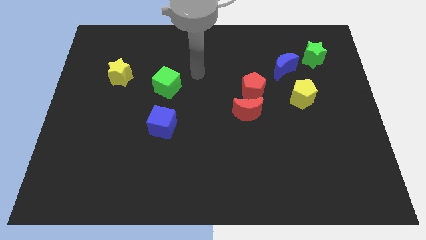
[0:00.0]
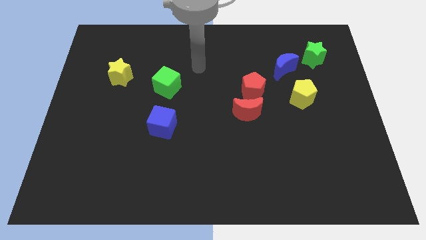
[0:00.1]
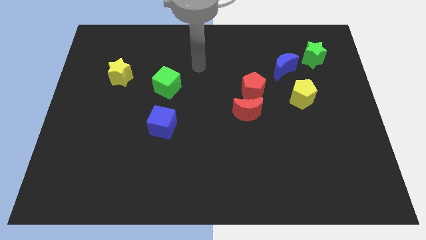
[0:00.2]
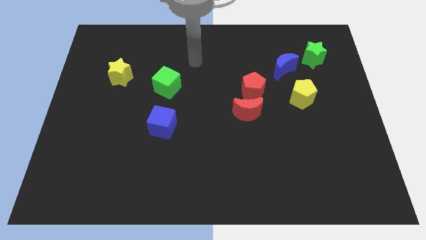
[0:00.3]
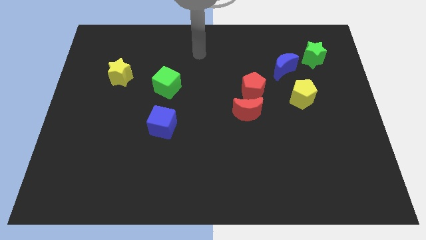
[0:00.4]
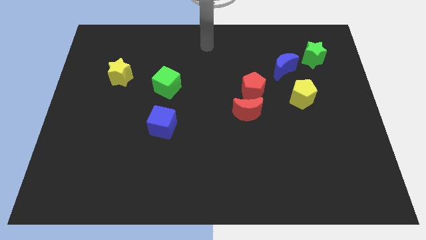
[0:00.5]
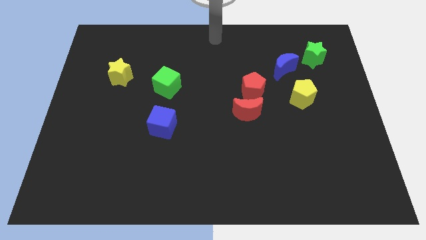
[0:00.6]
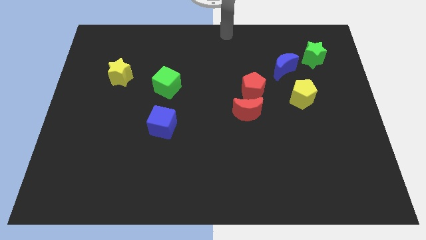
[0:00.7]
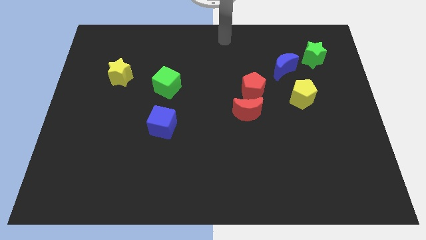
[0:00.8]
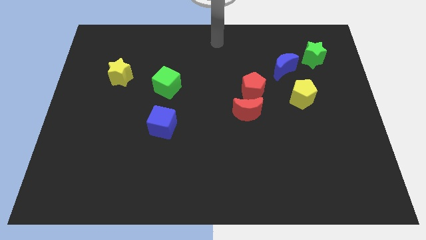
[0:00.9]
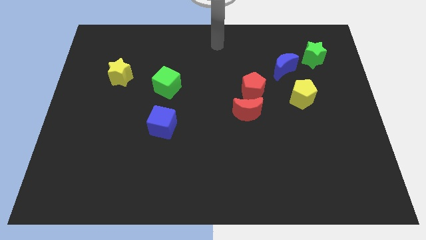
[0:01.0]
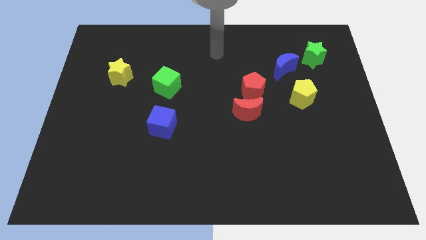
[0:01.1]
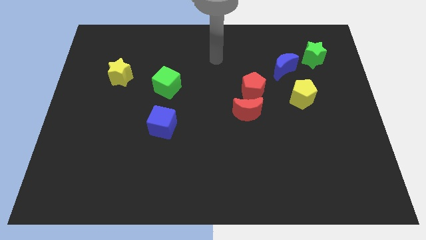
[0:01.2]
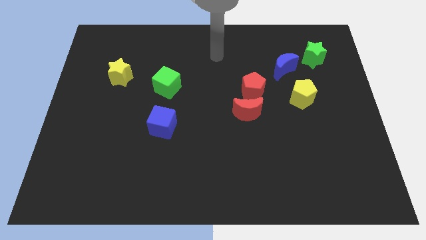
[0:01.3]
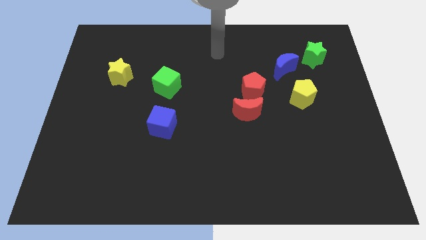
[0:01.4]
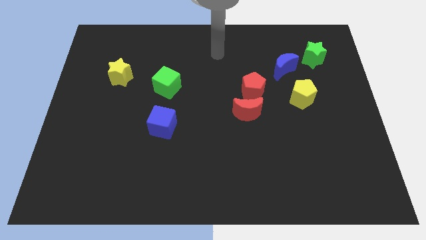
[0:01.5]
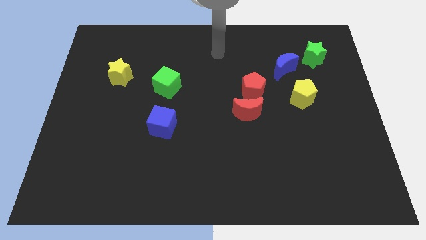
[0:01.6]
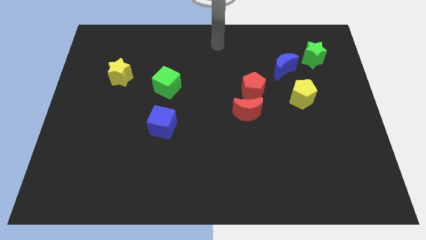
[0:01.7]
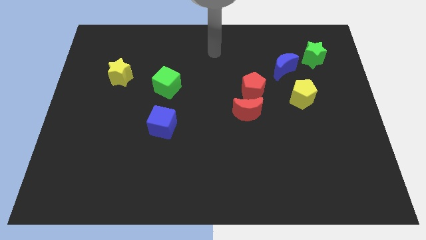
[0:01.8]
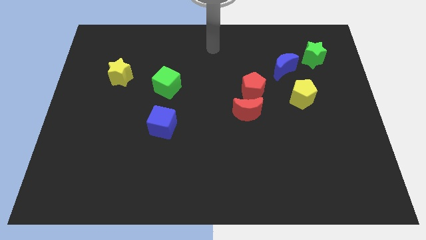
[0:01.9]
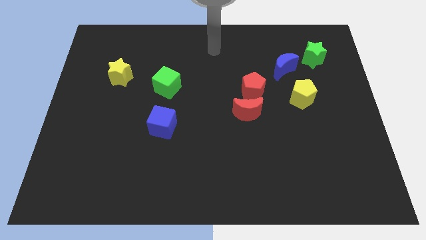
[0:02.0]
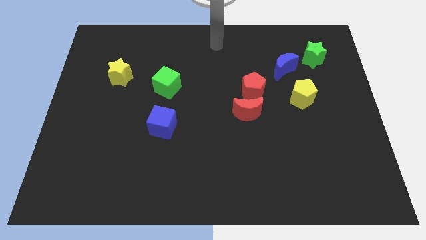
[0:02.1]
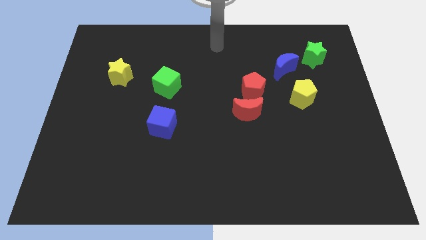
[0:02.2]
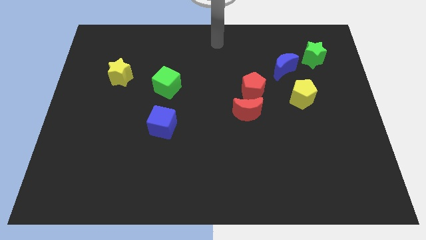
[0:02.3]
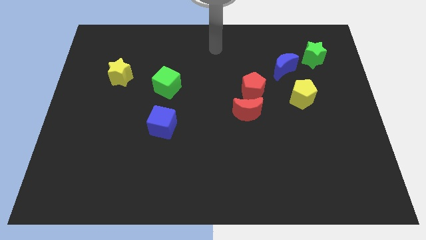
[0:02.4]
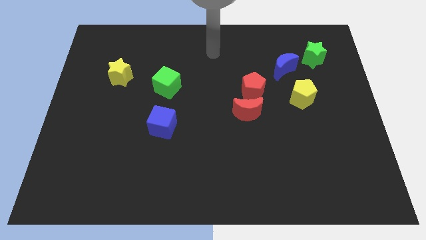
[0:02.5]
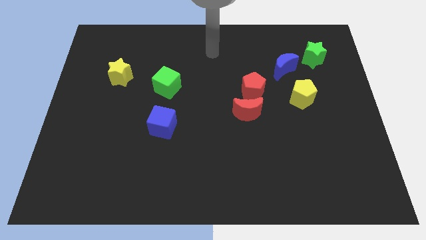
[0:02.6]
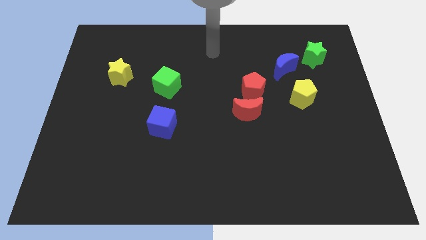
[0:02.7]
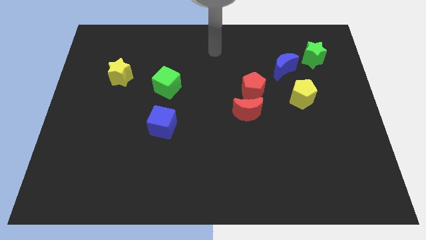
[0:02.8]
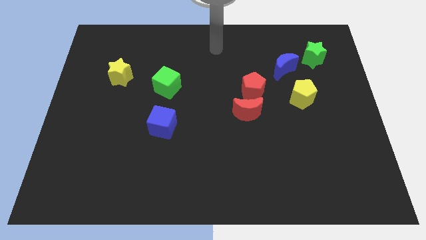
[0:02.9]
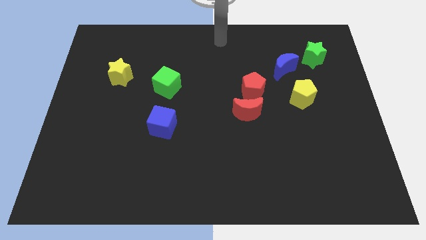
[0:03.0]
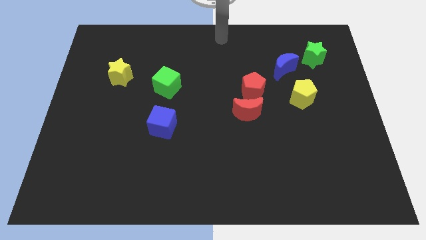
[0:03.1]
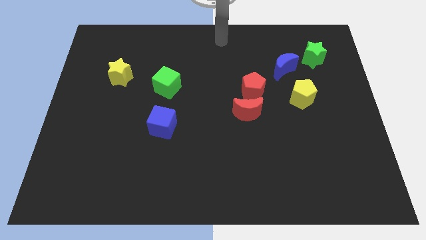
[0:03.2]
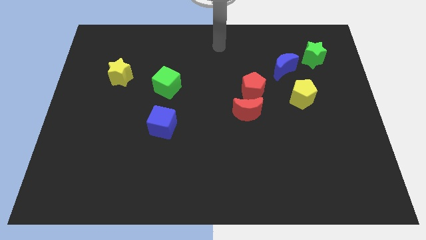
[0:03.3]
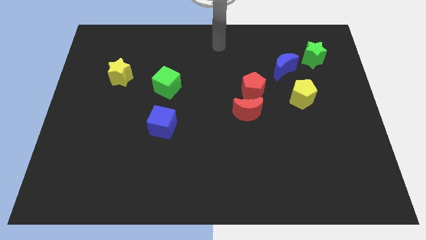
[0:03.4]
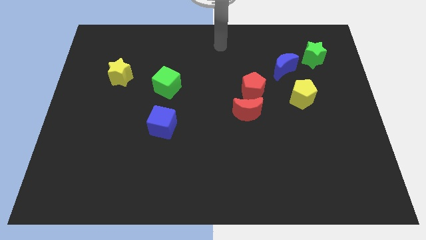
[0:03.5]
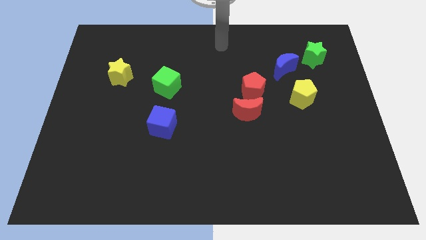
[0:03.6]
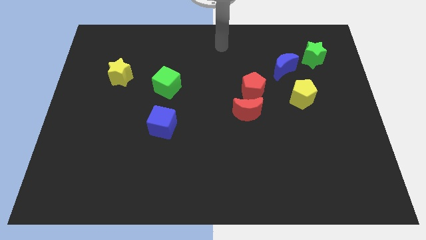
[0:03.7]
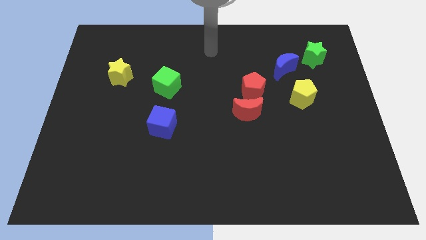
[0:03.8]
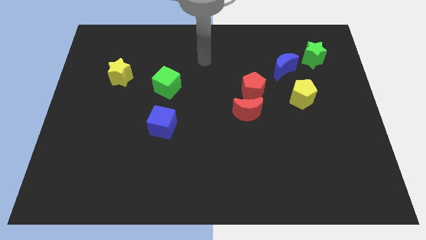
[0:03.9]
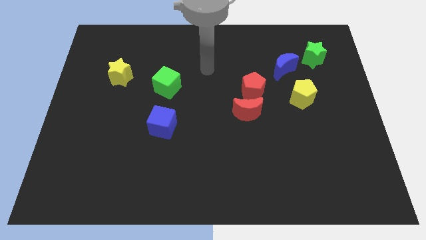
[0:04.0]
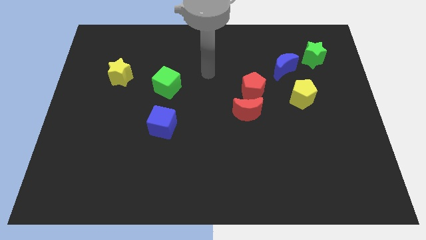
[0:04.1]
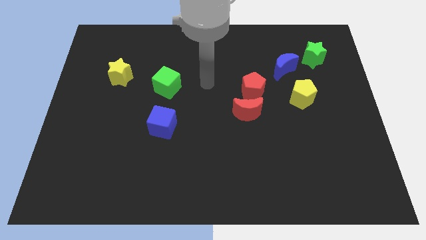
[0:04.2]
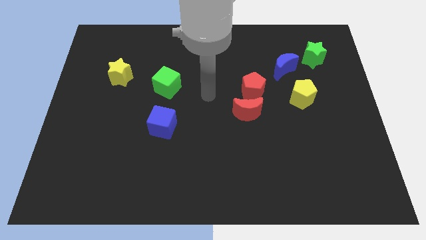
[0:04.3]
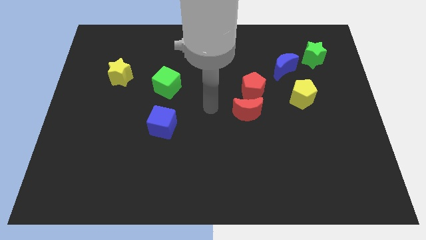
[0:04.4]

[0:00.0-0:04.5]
place your arm at the center of the board

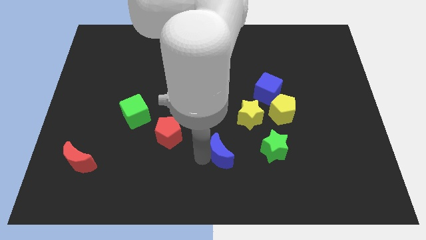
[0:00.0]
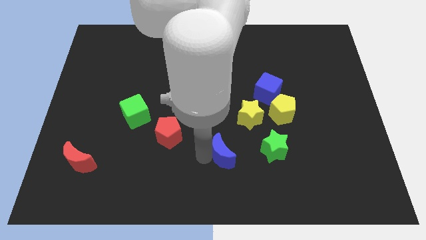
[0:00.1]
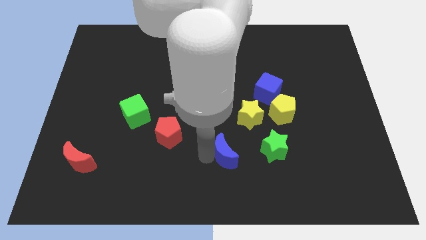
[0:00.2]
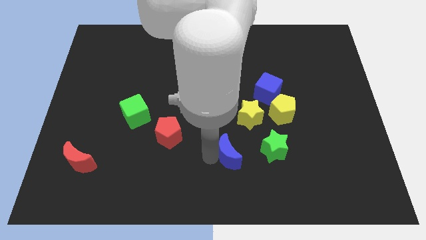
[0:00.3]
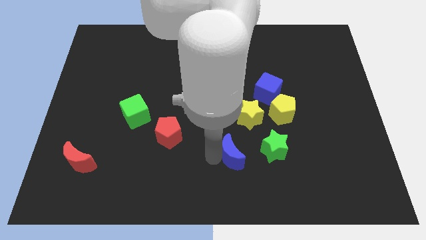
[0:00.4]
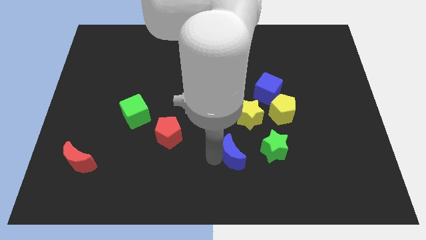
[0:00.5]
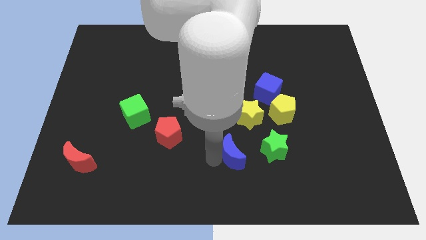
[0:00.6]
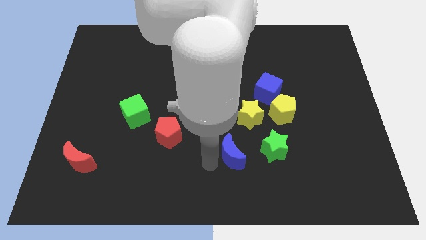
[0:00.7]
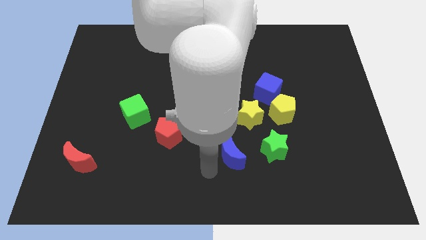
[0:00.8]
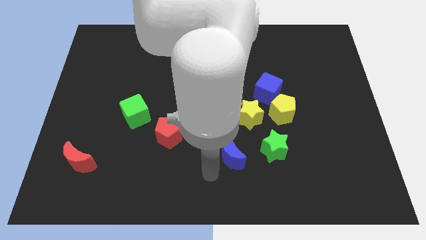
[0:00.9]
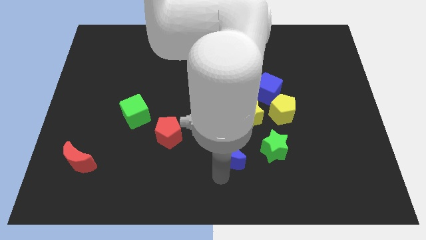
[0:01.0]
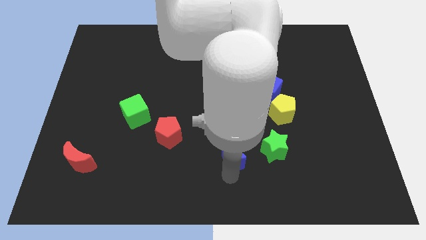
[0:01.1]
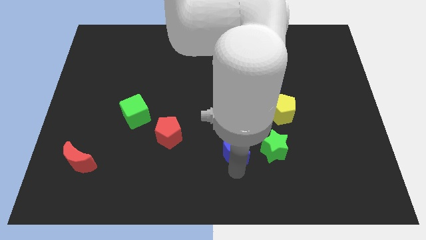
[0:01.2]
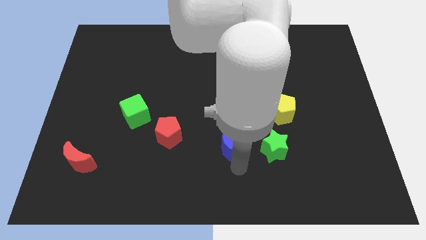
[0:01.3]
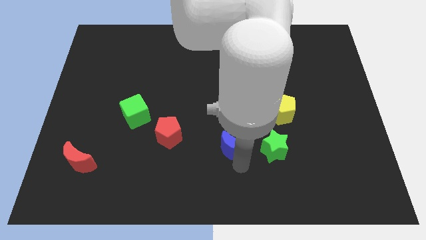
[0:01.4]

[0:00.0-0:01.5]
move the blue crescent to the left of the green star

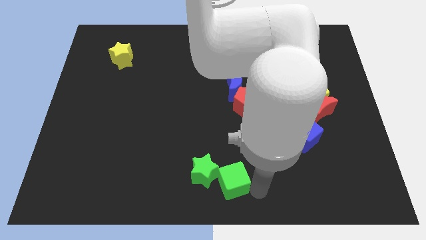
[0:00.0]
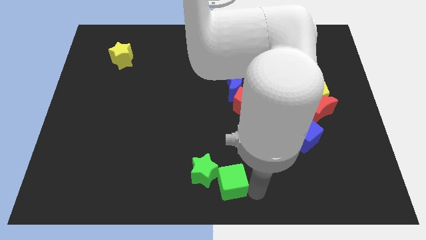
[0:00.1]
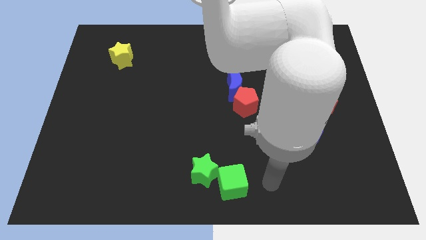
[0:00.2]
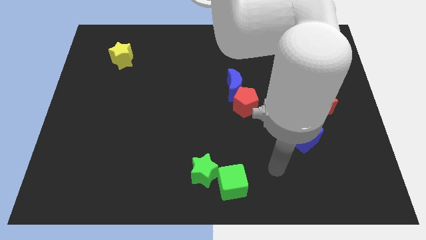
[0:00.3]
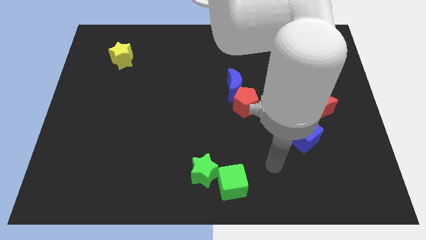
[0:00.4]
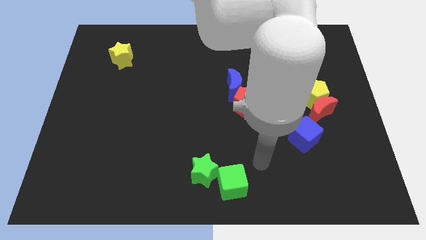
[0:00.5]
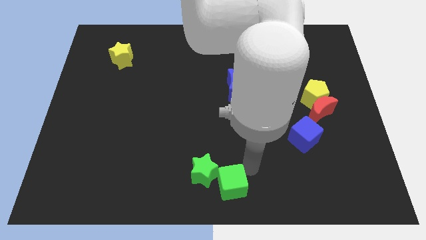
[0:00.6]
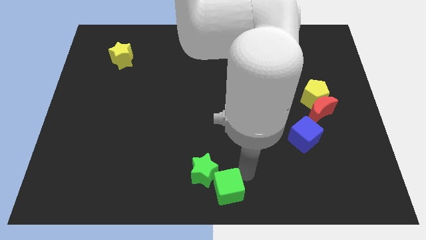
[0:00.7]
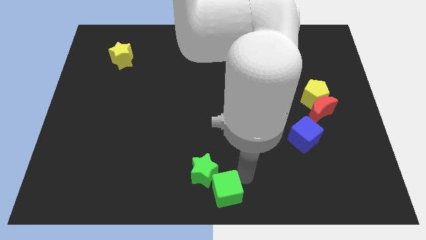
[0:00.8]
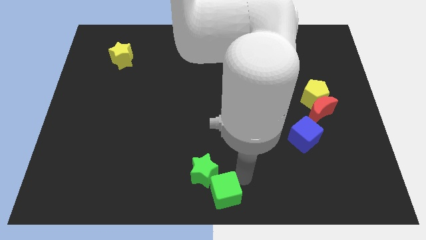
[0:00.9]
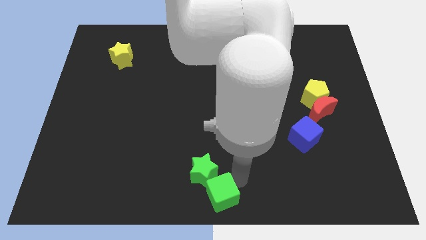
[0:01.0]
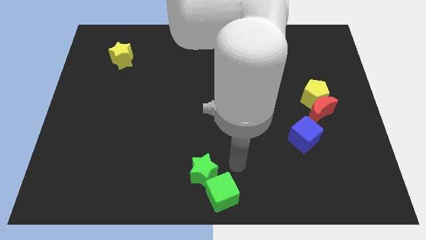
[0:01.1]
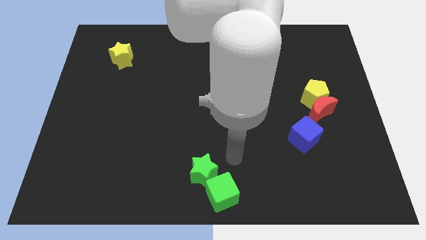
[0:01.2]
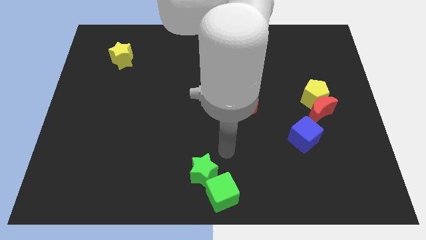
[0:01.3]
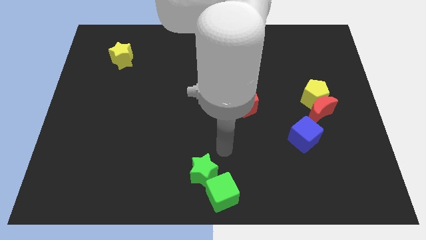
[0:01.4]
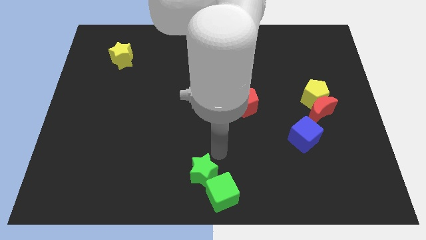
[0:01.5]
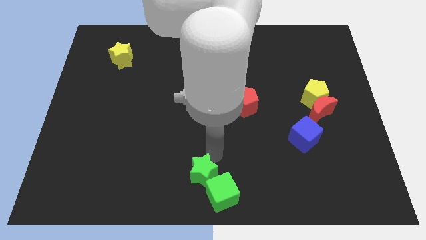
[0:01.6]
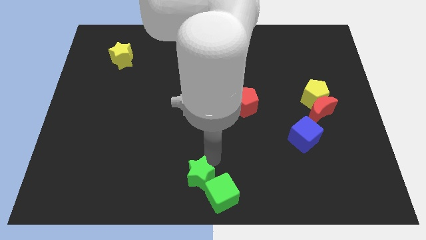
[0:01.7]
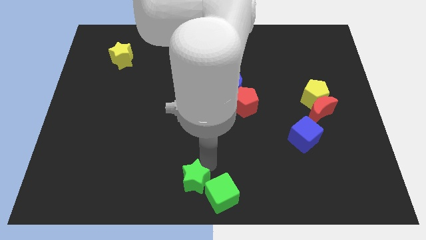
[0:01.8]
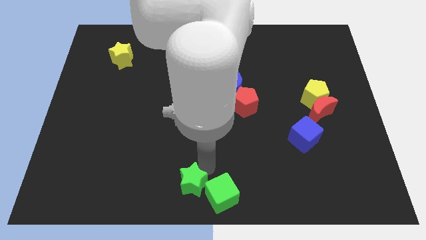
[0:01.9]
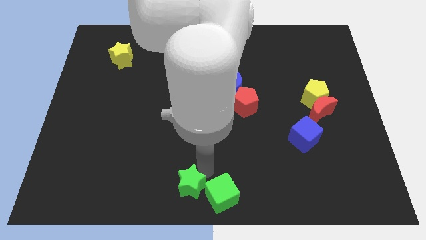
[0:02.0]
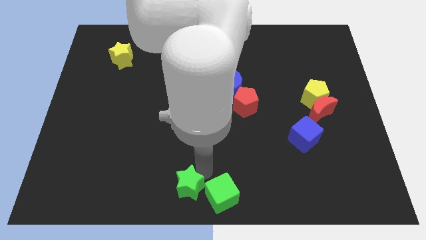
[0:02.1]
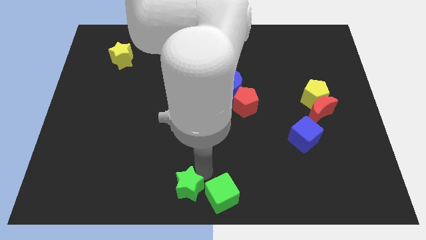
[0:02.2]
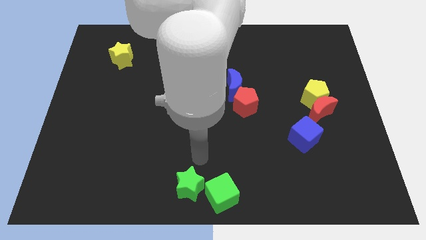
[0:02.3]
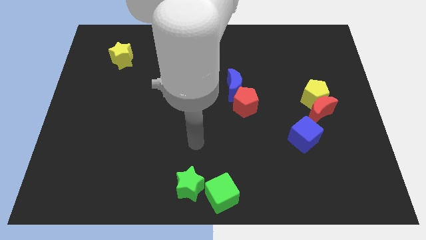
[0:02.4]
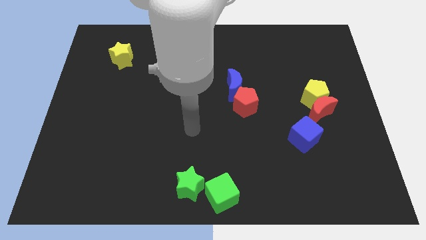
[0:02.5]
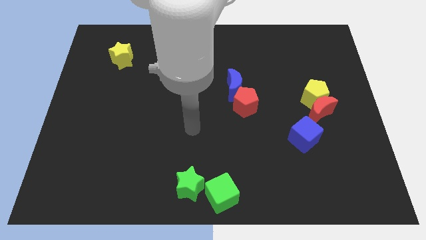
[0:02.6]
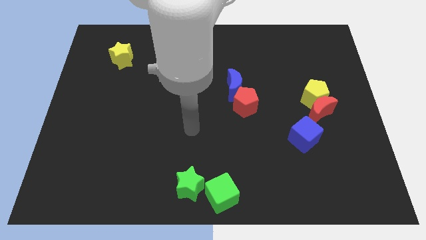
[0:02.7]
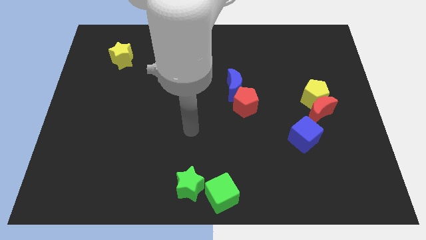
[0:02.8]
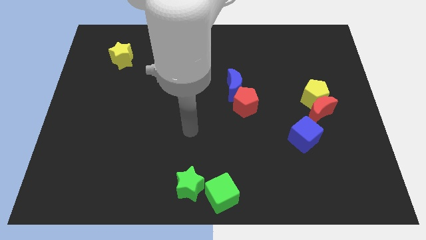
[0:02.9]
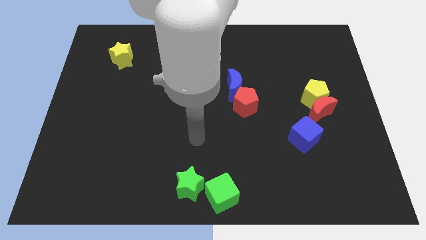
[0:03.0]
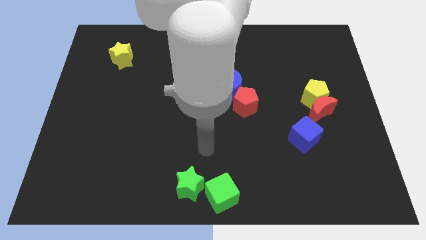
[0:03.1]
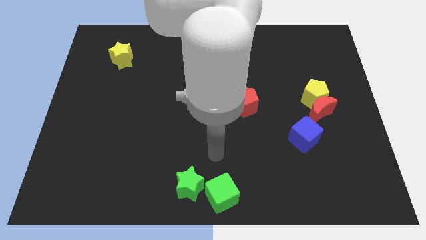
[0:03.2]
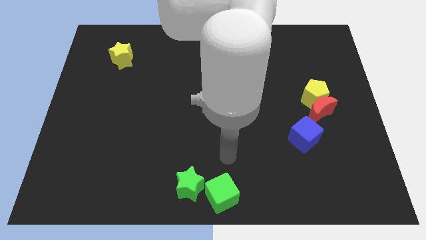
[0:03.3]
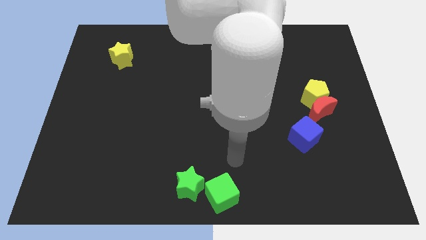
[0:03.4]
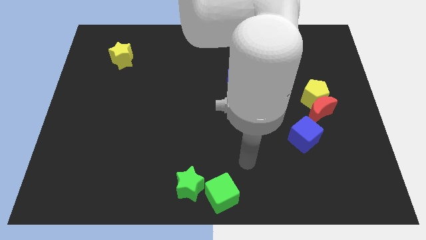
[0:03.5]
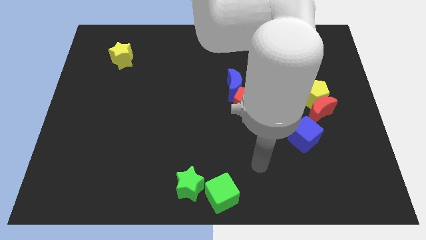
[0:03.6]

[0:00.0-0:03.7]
move your hand away from the green blocks
